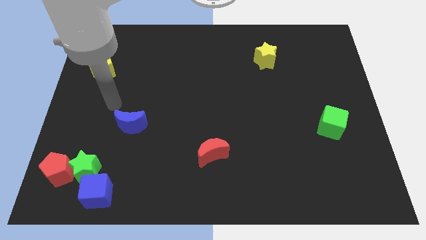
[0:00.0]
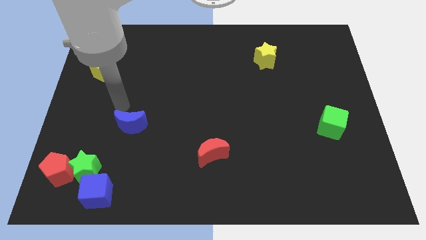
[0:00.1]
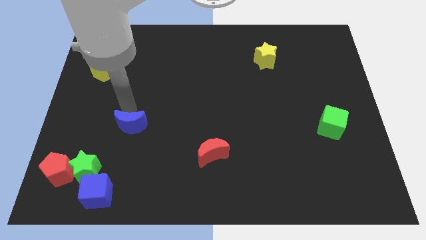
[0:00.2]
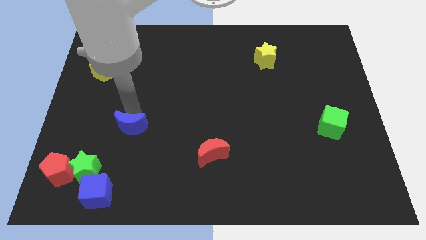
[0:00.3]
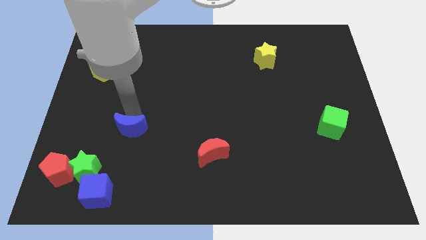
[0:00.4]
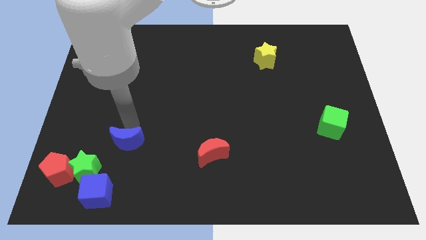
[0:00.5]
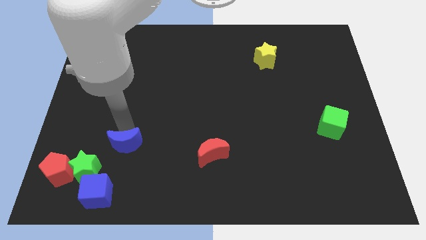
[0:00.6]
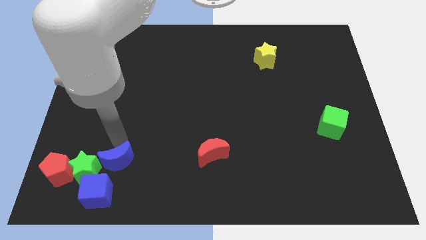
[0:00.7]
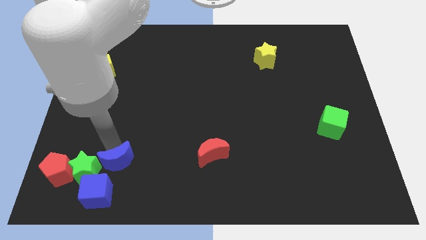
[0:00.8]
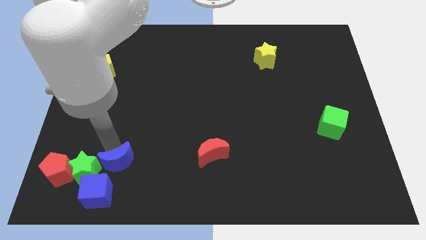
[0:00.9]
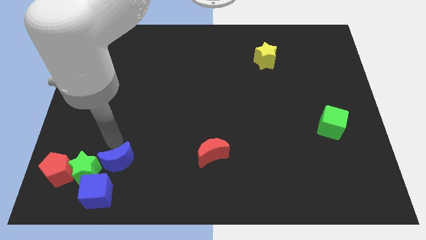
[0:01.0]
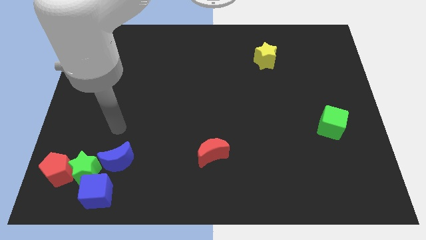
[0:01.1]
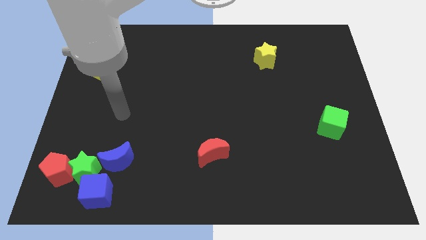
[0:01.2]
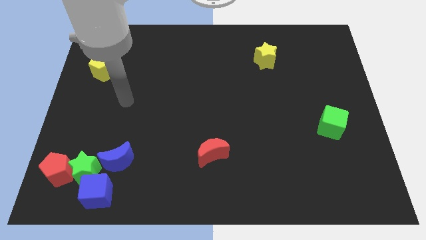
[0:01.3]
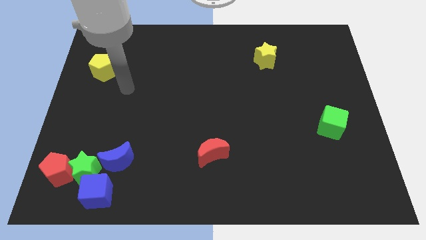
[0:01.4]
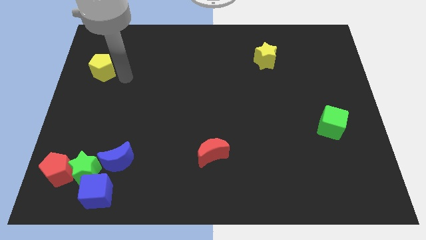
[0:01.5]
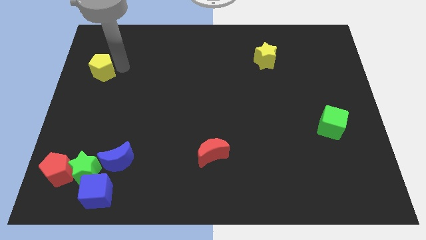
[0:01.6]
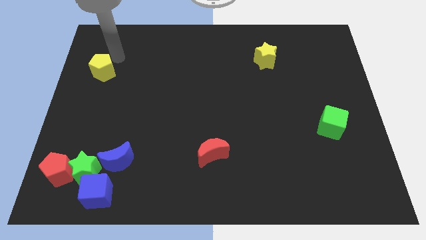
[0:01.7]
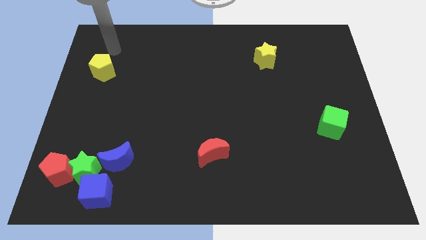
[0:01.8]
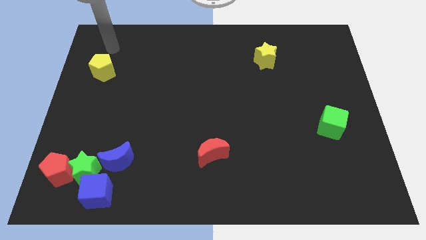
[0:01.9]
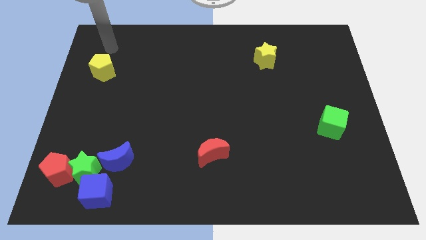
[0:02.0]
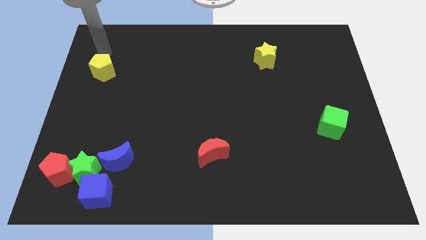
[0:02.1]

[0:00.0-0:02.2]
place the arm above the yellow pentagon

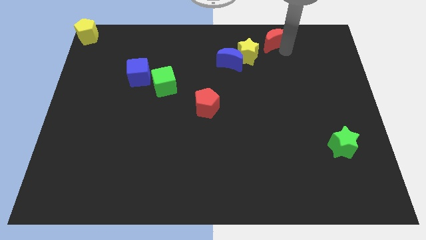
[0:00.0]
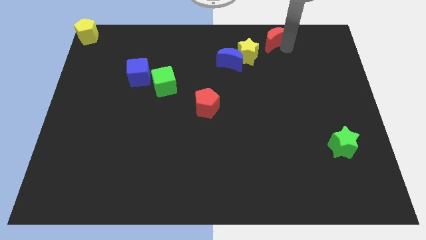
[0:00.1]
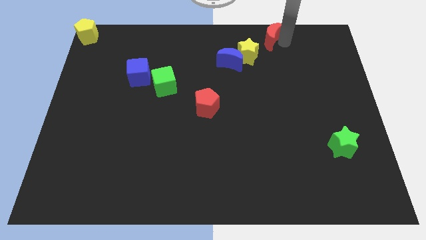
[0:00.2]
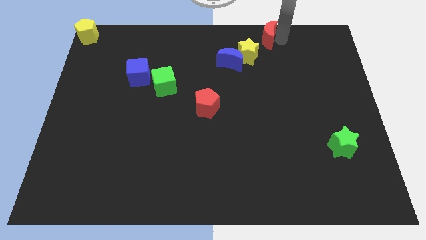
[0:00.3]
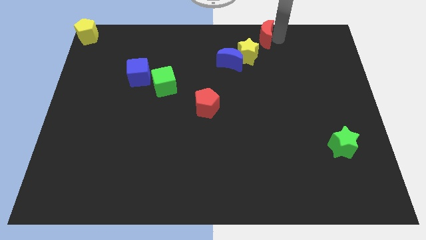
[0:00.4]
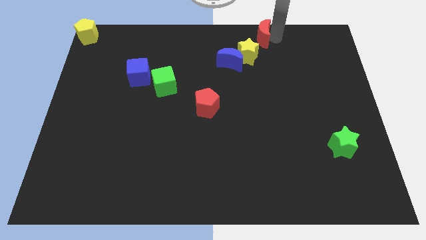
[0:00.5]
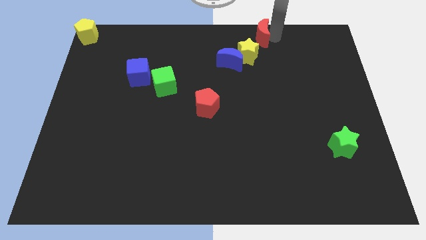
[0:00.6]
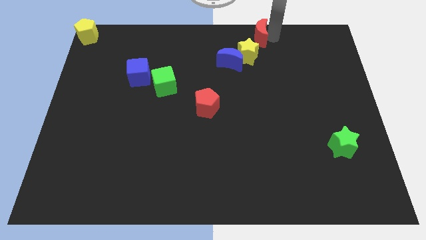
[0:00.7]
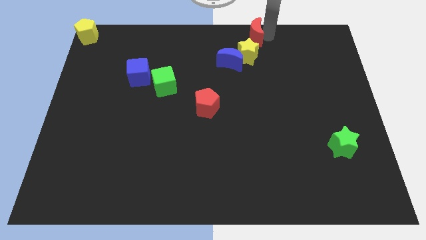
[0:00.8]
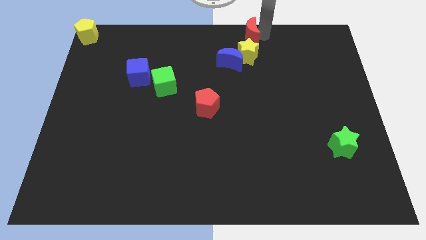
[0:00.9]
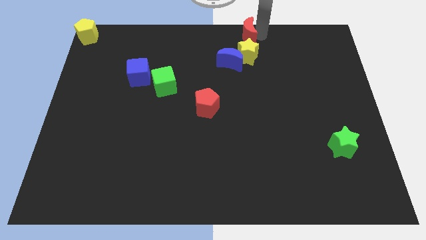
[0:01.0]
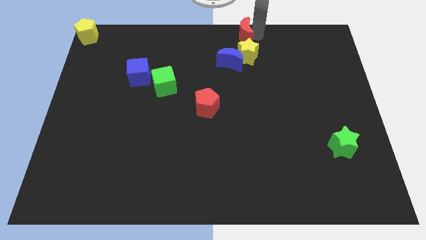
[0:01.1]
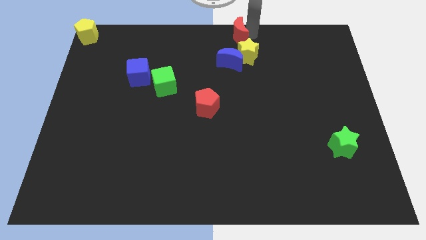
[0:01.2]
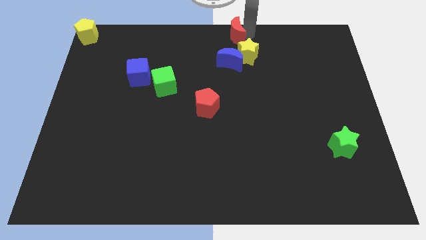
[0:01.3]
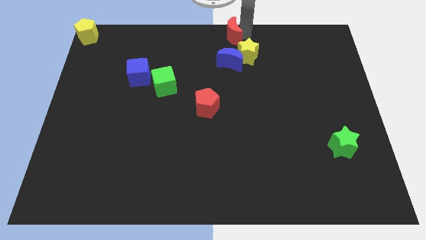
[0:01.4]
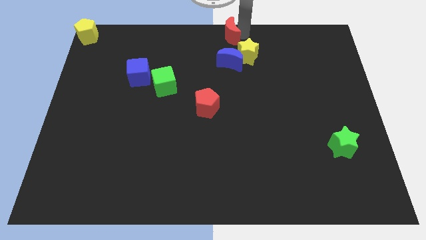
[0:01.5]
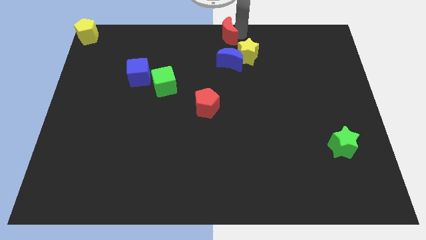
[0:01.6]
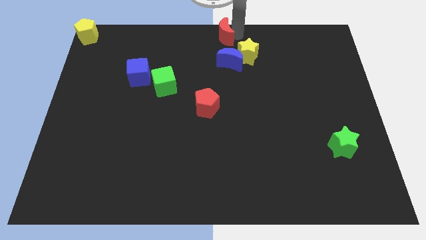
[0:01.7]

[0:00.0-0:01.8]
push the red crescent towards the top center of the board

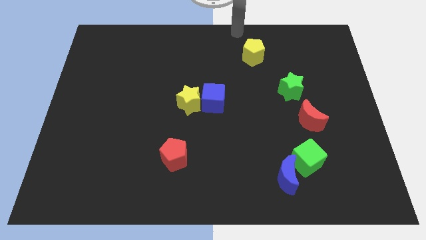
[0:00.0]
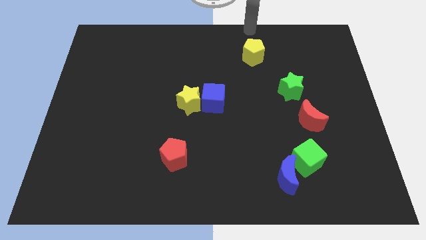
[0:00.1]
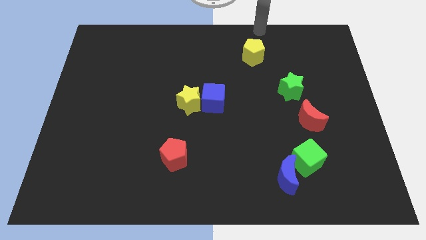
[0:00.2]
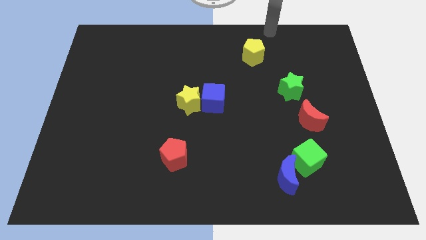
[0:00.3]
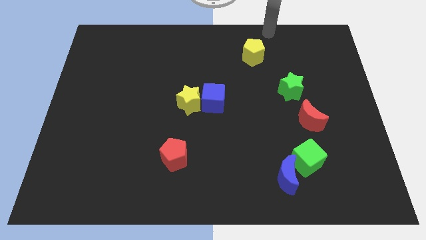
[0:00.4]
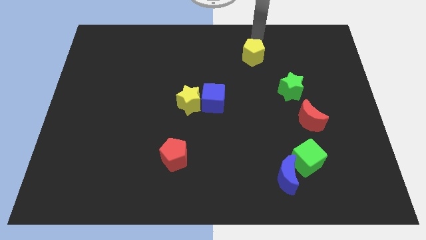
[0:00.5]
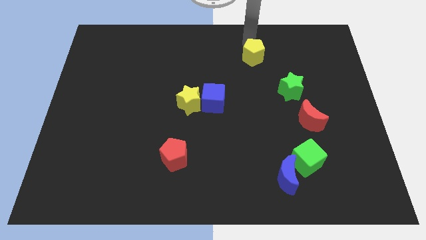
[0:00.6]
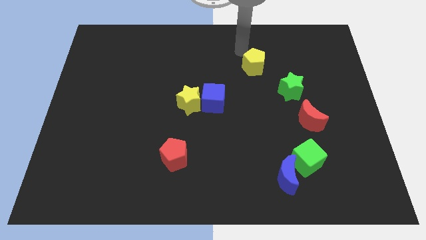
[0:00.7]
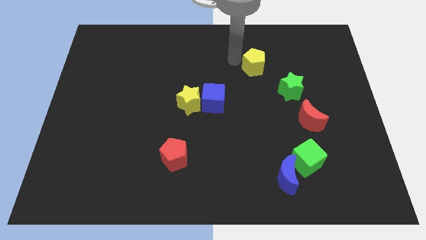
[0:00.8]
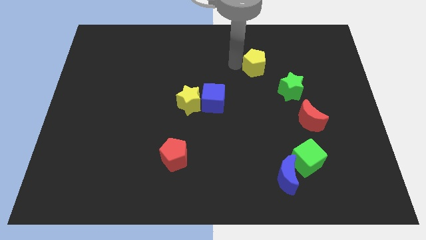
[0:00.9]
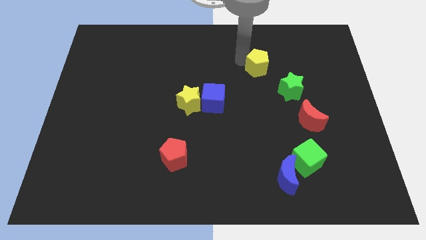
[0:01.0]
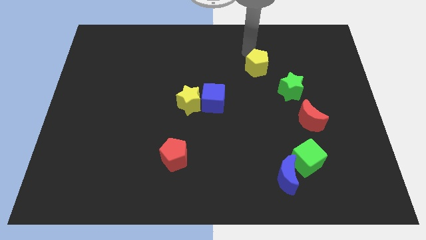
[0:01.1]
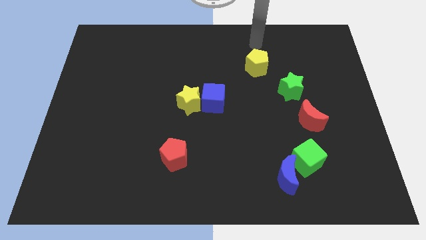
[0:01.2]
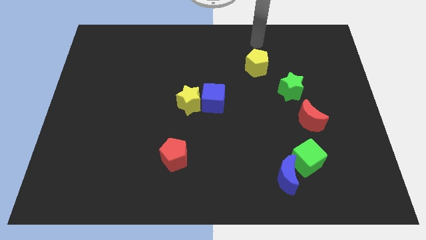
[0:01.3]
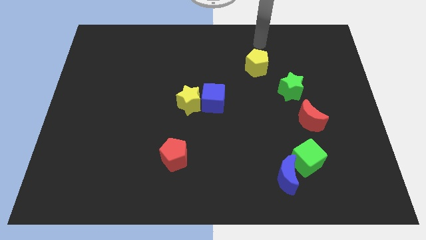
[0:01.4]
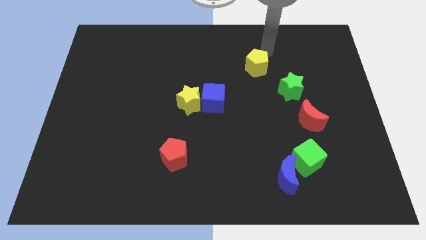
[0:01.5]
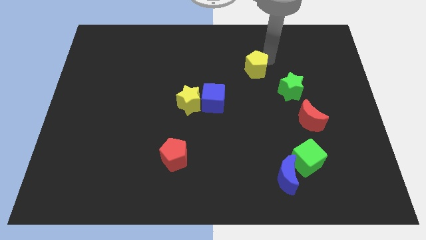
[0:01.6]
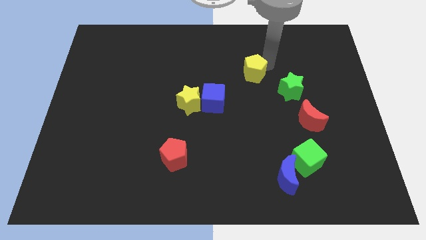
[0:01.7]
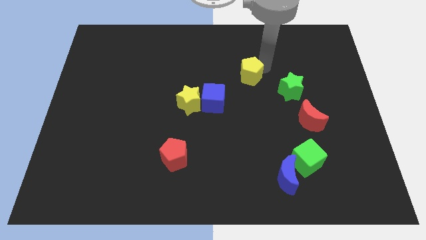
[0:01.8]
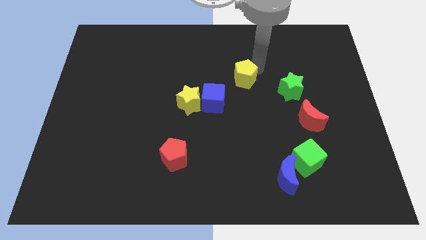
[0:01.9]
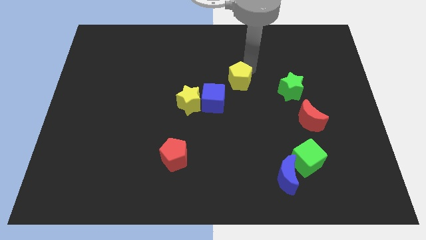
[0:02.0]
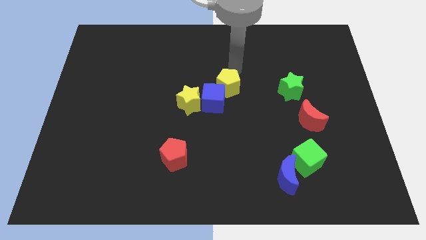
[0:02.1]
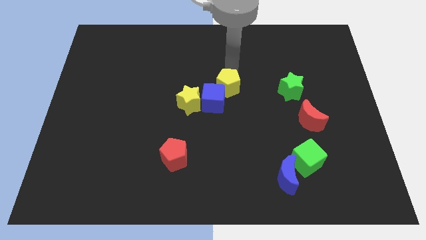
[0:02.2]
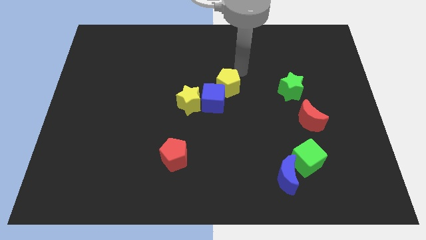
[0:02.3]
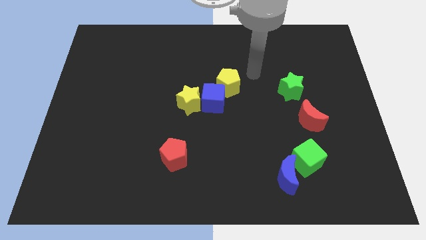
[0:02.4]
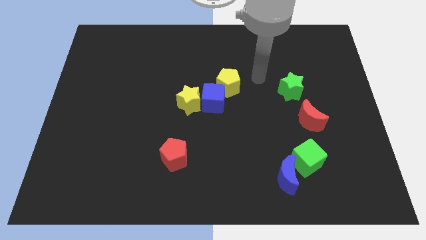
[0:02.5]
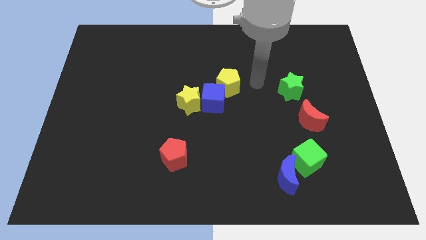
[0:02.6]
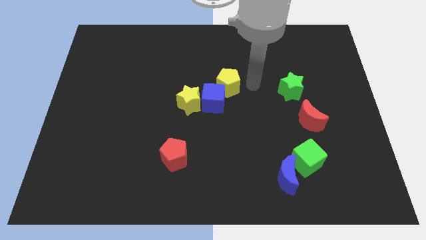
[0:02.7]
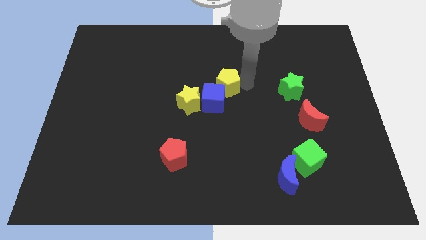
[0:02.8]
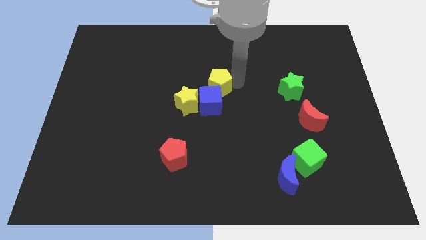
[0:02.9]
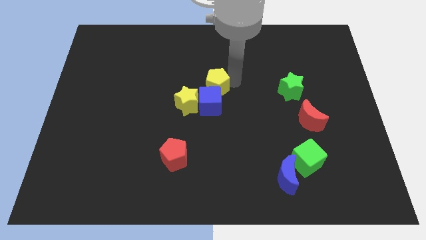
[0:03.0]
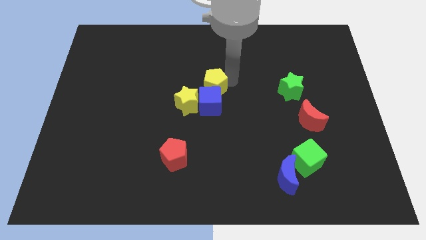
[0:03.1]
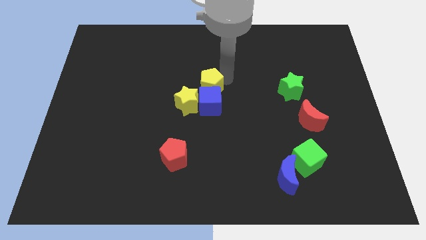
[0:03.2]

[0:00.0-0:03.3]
place the yellow pentagon on the top right side of the blue cube

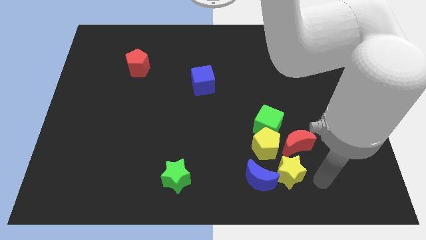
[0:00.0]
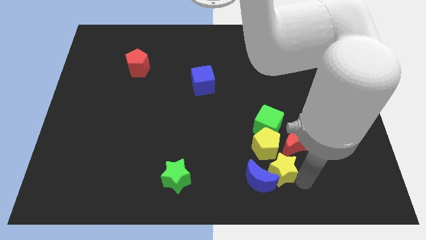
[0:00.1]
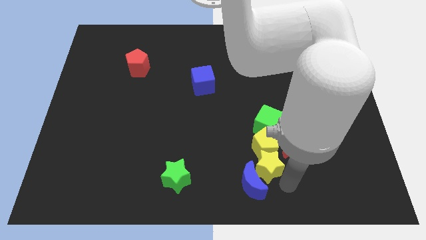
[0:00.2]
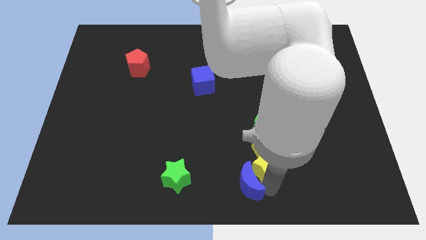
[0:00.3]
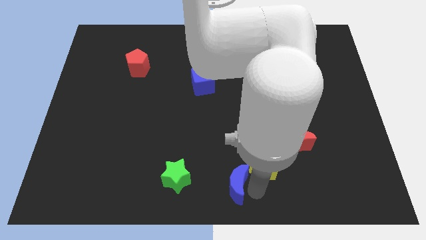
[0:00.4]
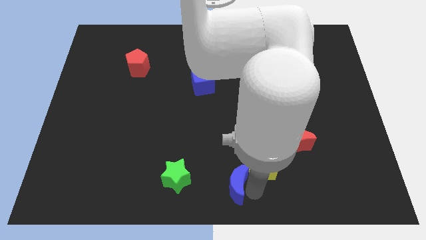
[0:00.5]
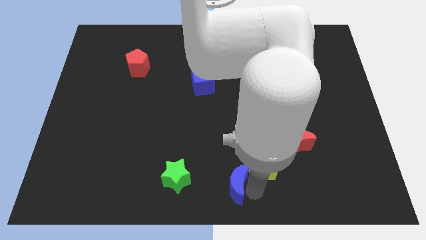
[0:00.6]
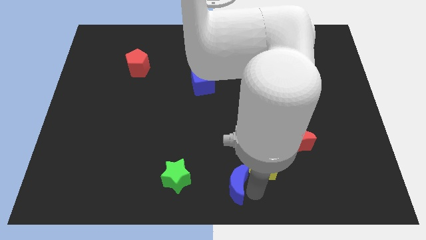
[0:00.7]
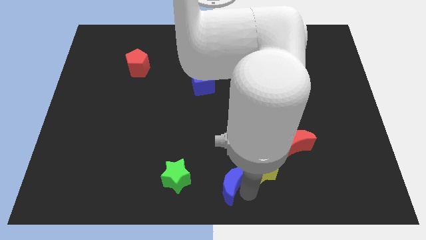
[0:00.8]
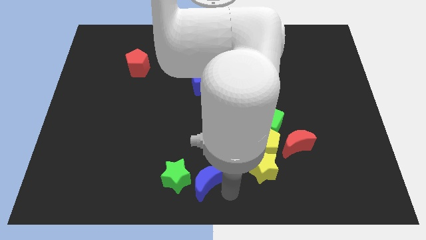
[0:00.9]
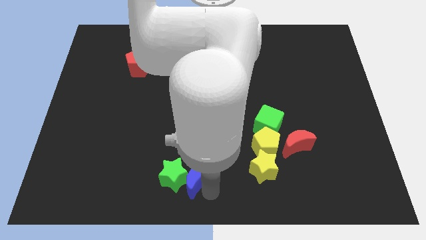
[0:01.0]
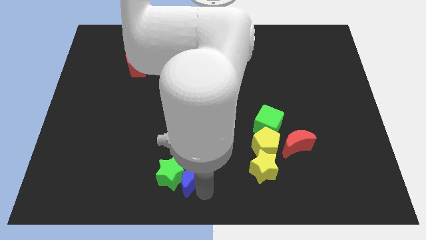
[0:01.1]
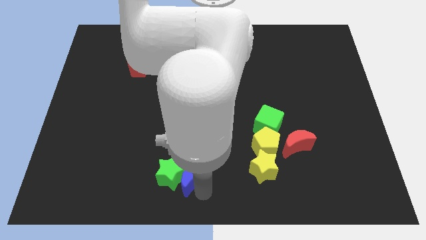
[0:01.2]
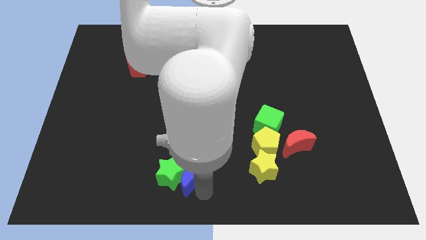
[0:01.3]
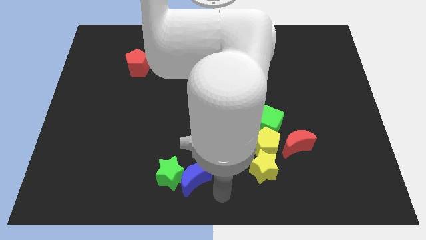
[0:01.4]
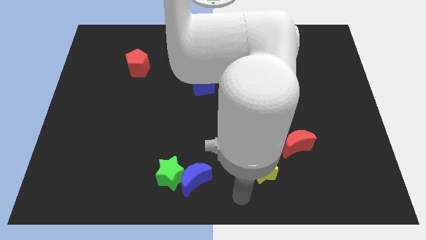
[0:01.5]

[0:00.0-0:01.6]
move the blue moon into the green star

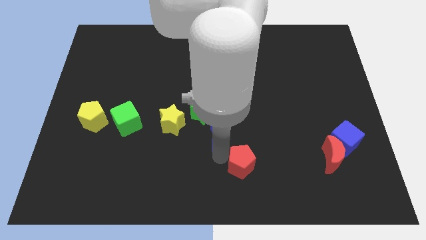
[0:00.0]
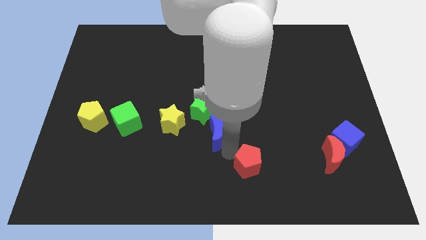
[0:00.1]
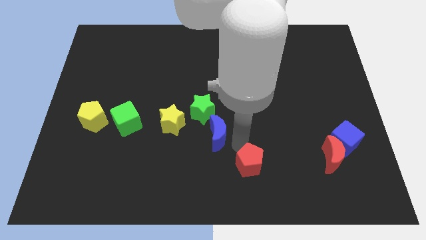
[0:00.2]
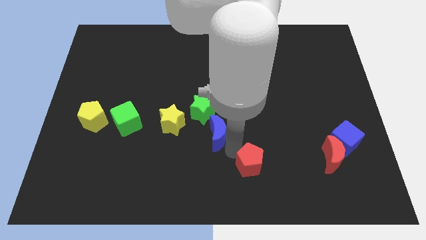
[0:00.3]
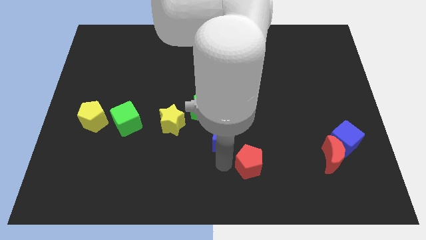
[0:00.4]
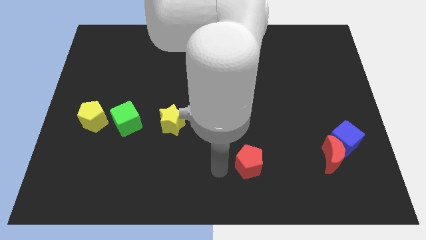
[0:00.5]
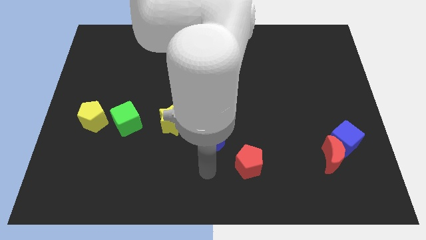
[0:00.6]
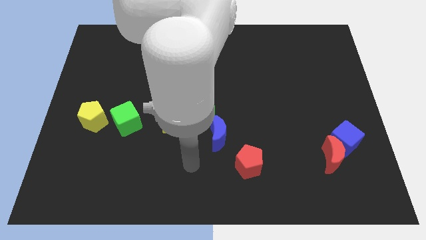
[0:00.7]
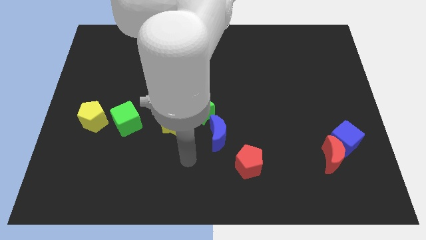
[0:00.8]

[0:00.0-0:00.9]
move red pentagon slightly right
